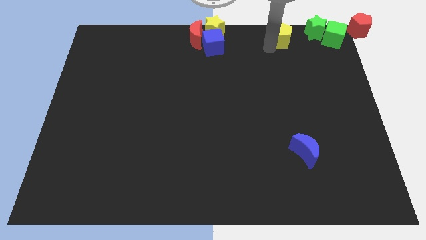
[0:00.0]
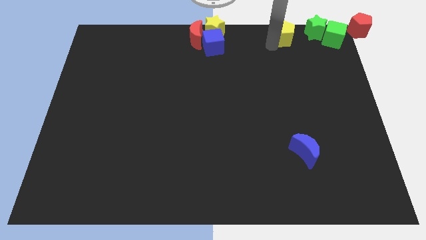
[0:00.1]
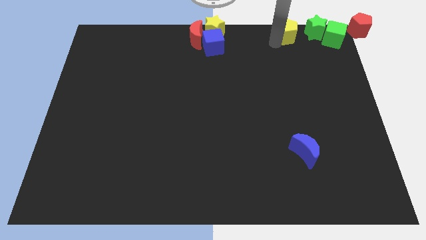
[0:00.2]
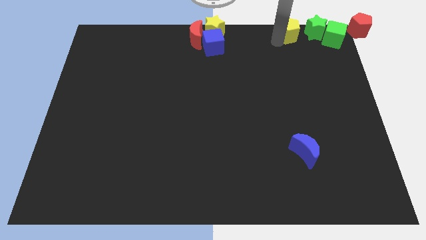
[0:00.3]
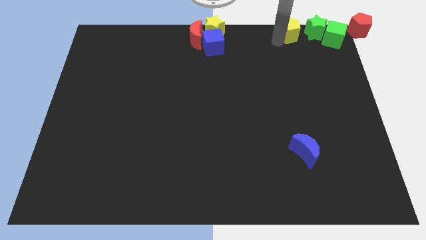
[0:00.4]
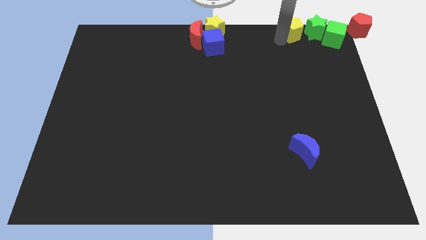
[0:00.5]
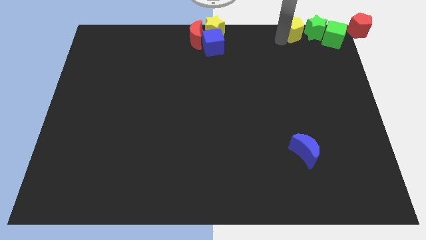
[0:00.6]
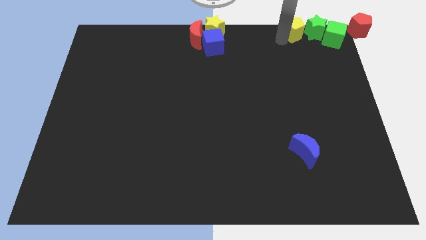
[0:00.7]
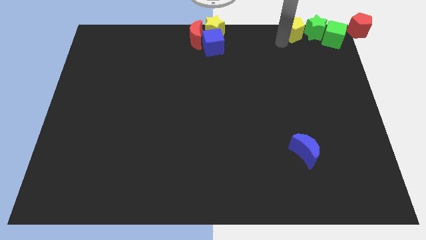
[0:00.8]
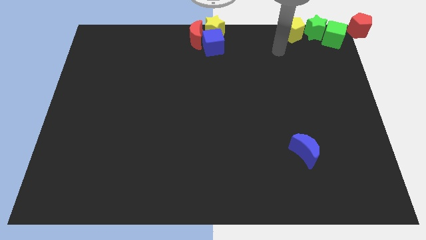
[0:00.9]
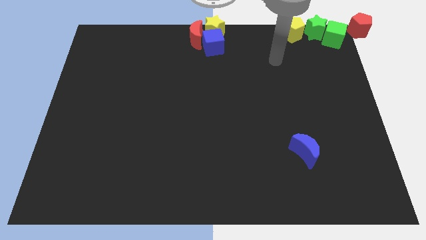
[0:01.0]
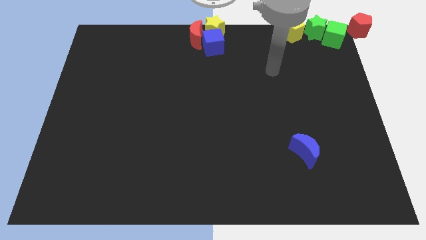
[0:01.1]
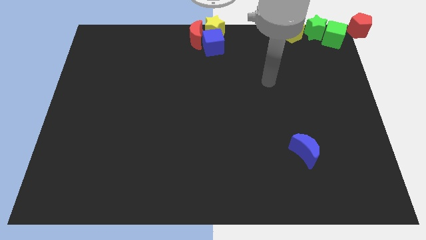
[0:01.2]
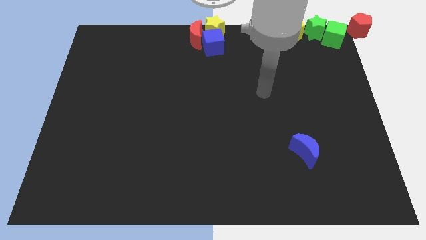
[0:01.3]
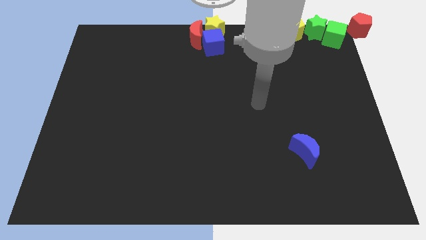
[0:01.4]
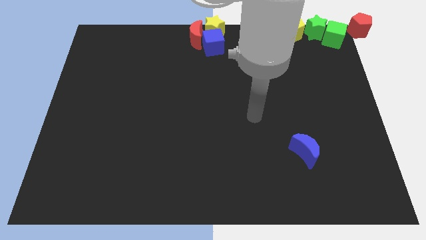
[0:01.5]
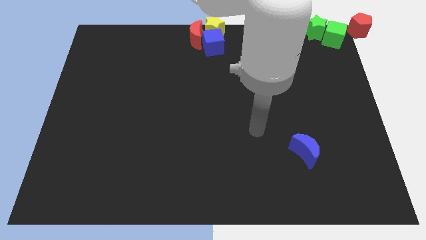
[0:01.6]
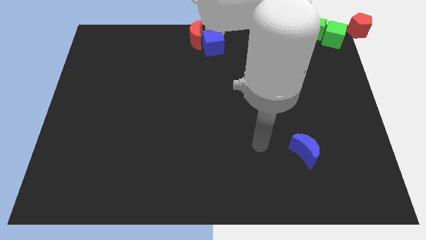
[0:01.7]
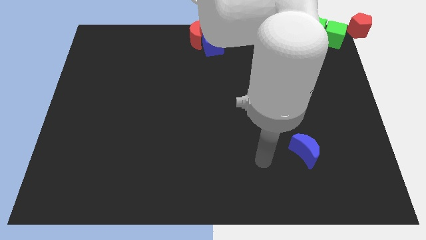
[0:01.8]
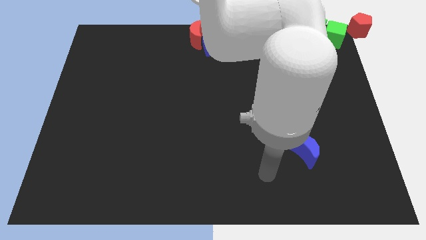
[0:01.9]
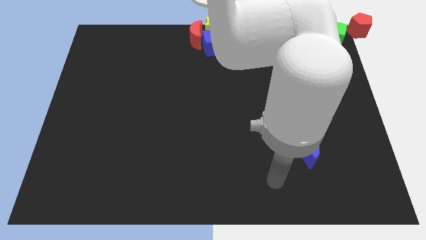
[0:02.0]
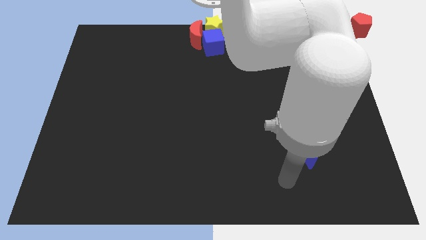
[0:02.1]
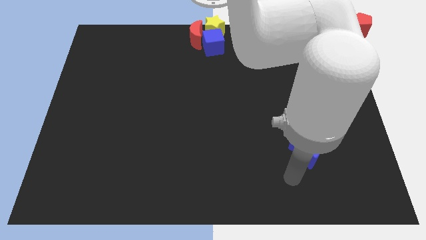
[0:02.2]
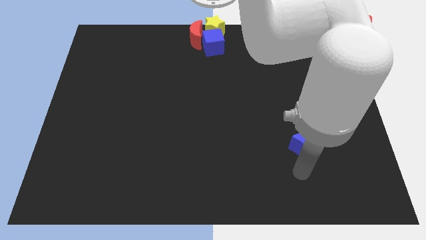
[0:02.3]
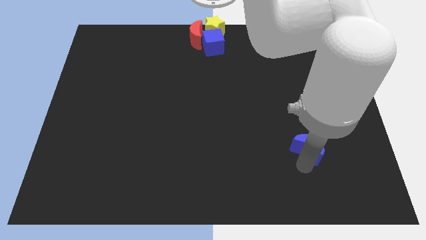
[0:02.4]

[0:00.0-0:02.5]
point your arm below blue moon

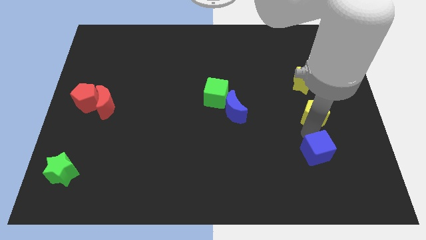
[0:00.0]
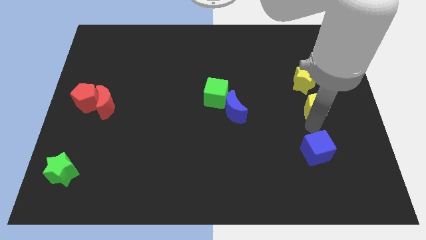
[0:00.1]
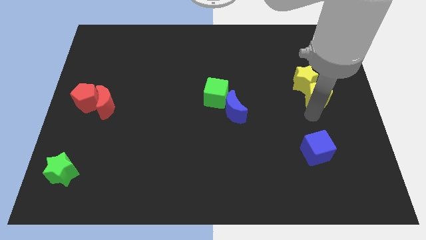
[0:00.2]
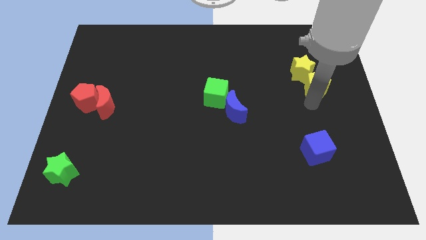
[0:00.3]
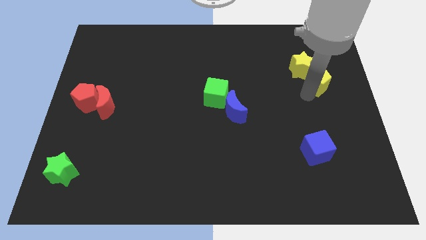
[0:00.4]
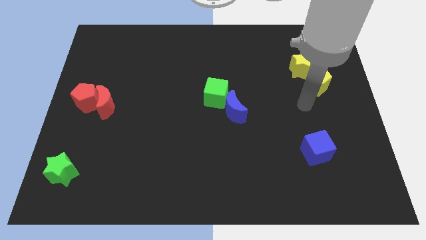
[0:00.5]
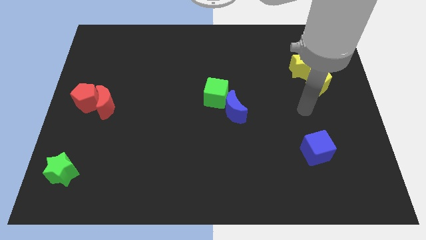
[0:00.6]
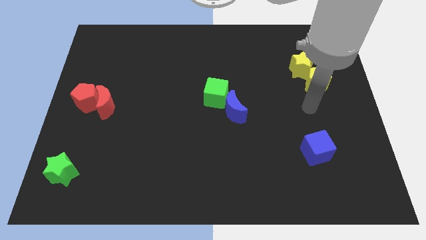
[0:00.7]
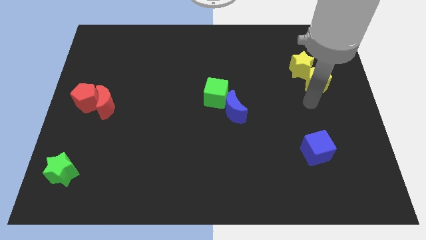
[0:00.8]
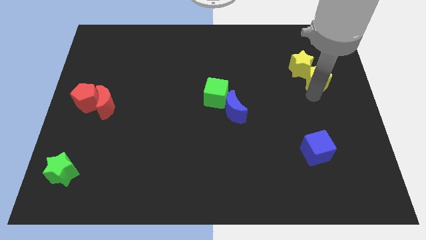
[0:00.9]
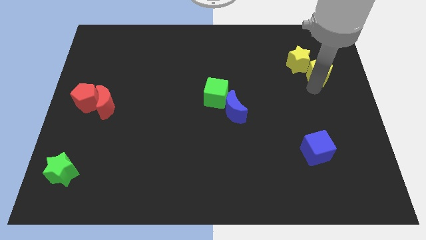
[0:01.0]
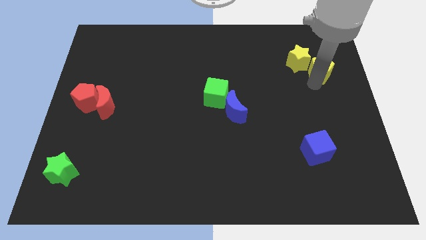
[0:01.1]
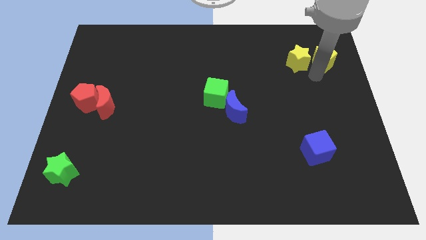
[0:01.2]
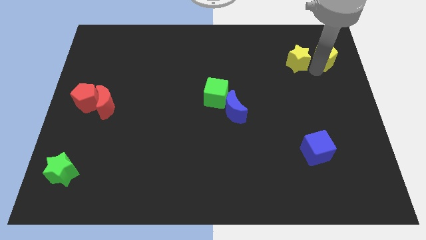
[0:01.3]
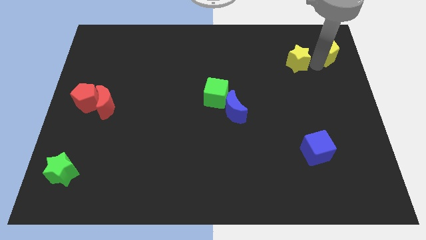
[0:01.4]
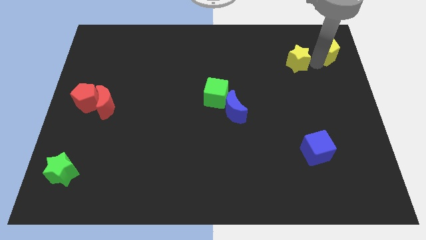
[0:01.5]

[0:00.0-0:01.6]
move the yellow pentagon to the right of the yellow star

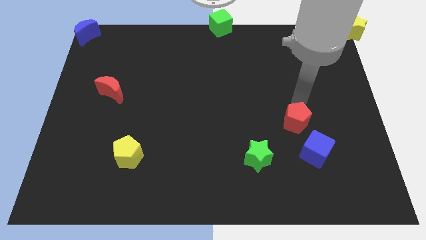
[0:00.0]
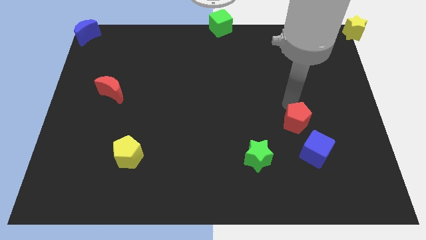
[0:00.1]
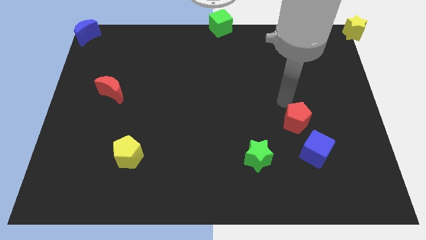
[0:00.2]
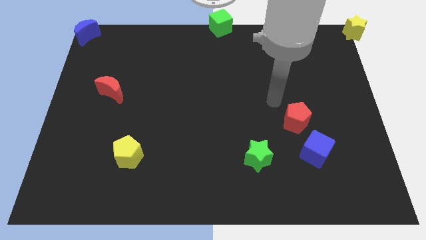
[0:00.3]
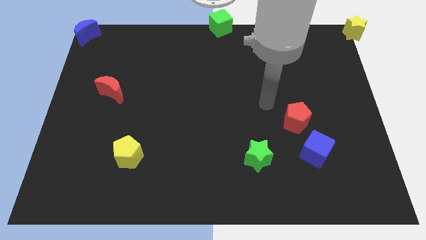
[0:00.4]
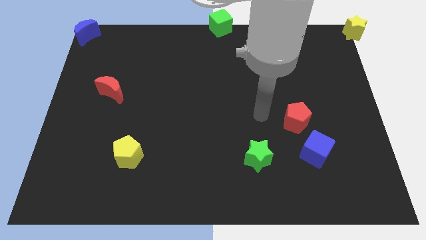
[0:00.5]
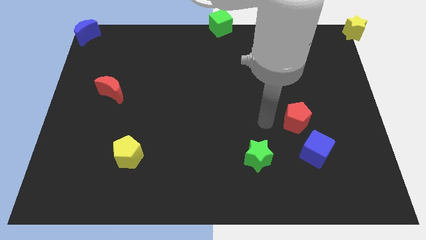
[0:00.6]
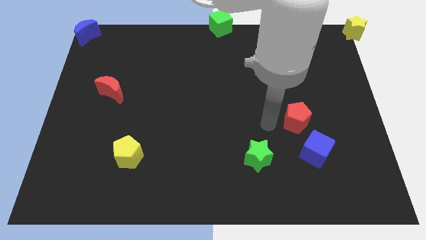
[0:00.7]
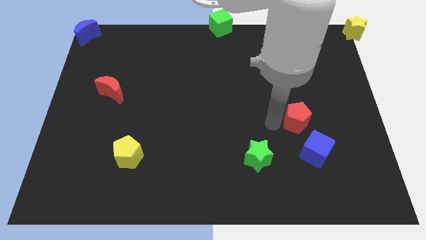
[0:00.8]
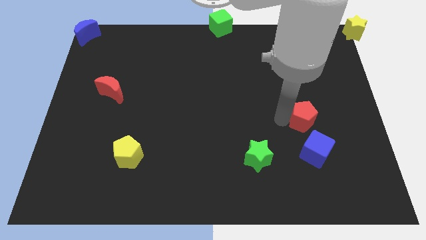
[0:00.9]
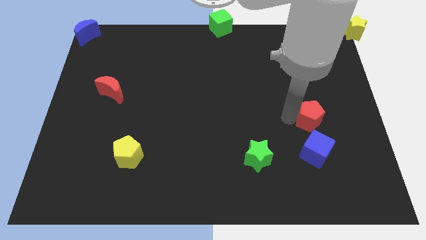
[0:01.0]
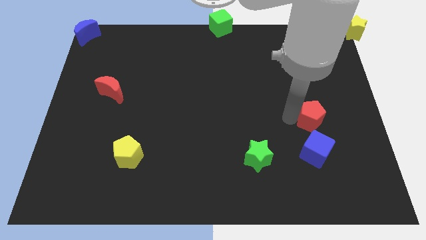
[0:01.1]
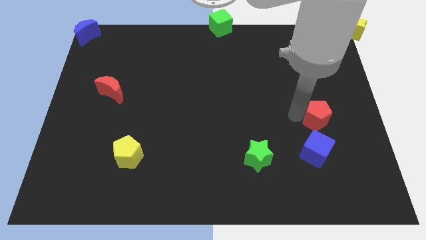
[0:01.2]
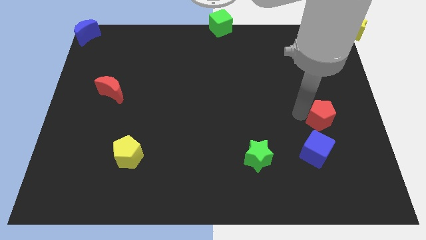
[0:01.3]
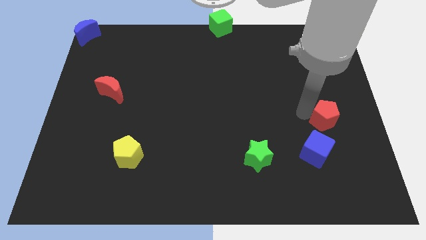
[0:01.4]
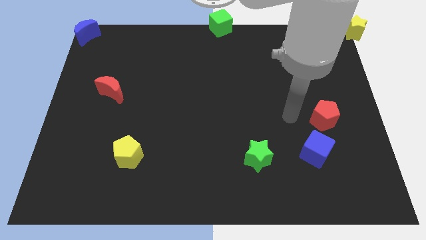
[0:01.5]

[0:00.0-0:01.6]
move the red pentagon to the top right side of the blue cube

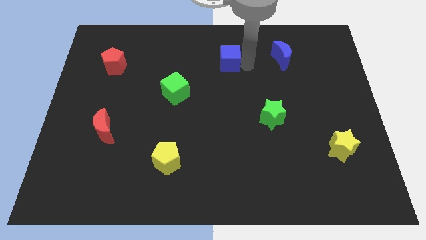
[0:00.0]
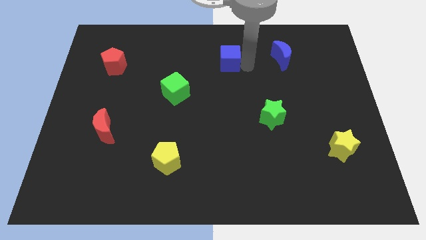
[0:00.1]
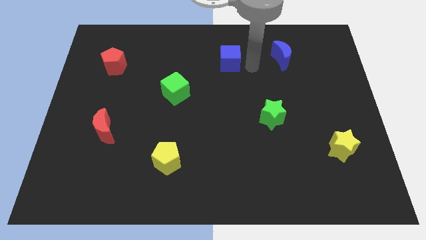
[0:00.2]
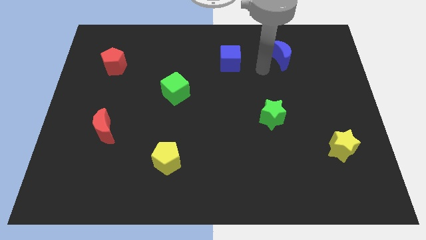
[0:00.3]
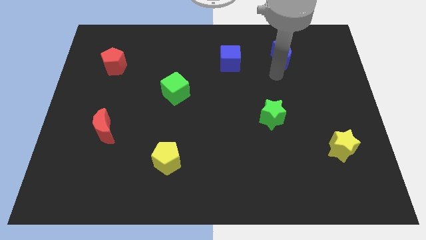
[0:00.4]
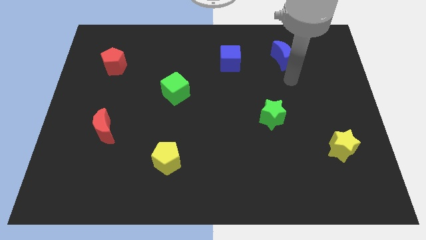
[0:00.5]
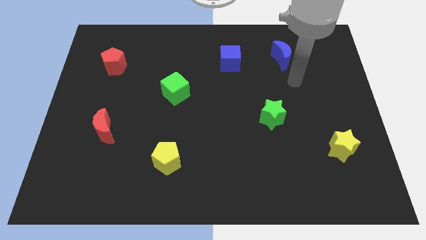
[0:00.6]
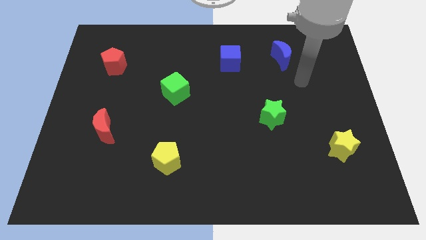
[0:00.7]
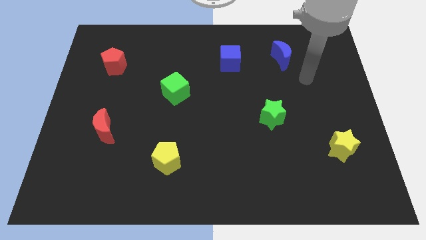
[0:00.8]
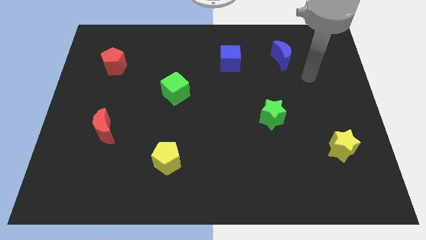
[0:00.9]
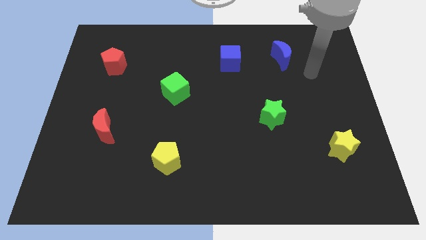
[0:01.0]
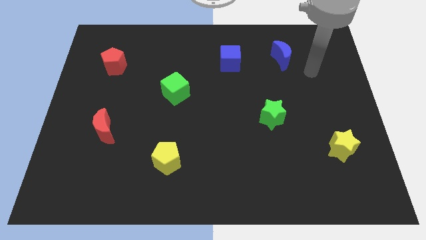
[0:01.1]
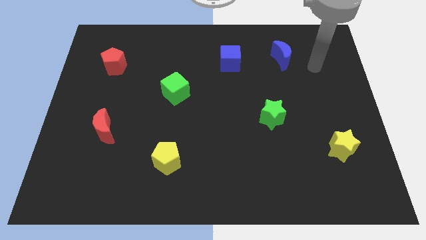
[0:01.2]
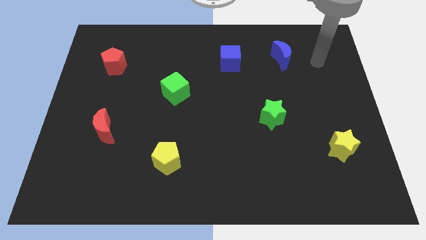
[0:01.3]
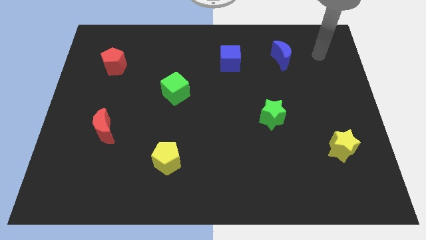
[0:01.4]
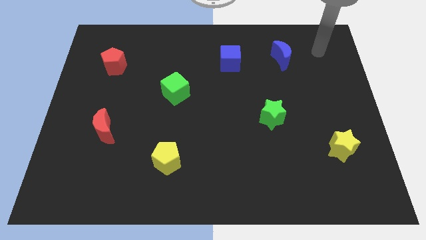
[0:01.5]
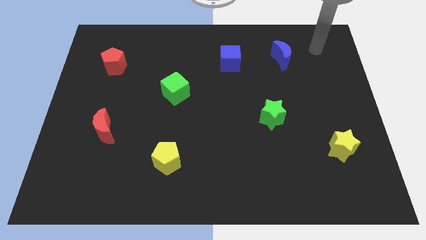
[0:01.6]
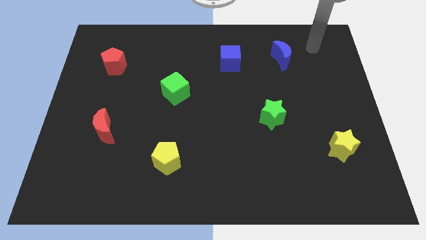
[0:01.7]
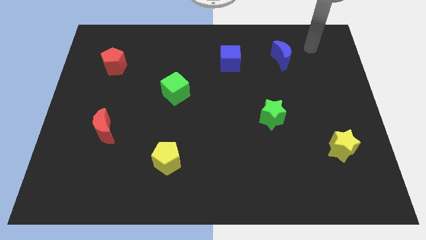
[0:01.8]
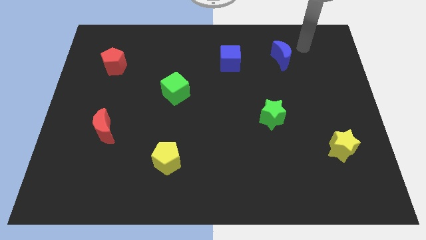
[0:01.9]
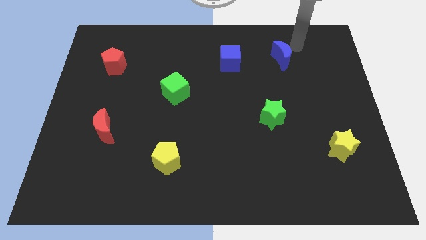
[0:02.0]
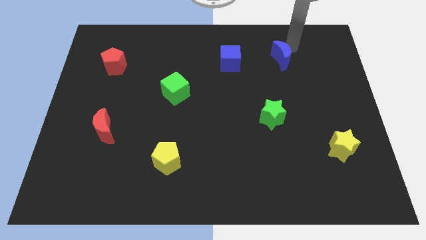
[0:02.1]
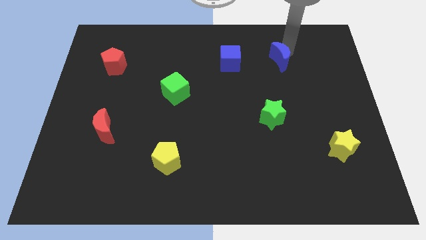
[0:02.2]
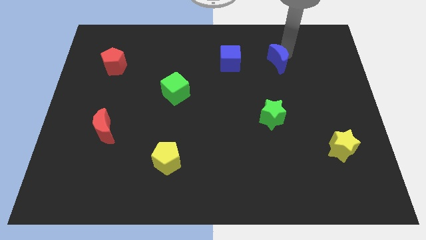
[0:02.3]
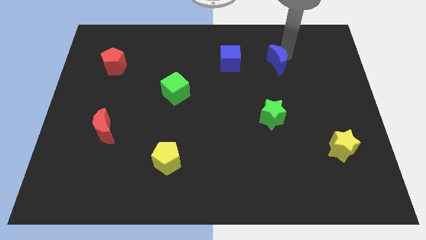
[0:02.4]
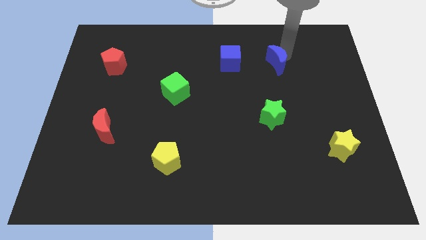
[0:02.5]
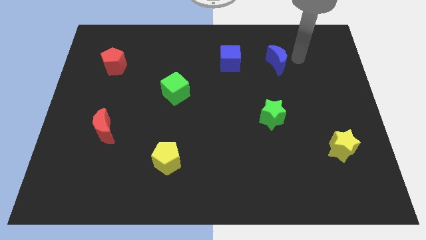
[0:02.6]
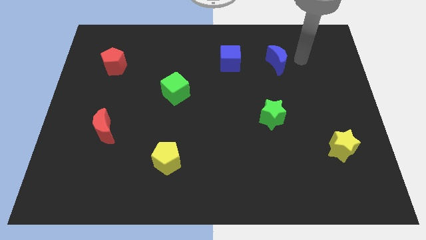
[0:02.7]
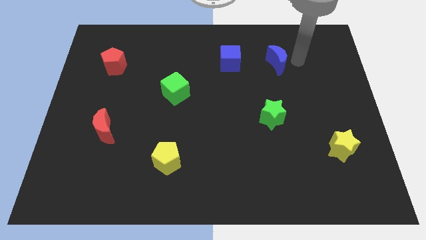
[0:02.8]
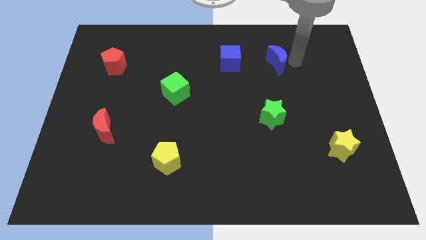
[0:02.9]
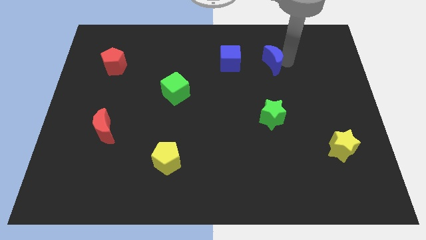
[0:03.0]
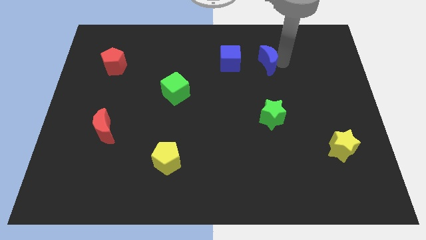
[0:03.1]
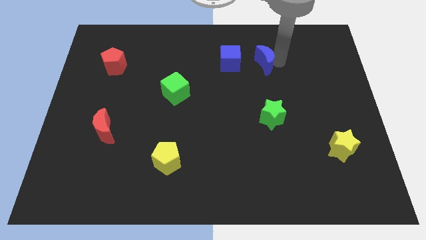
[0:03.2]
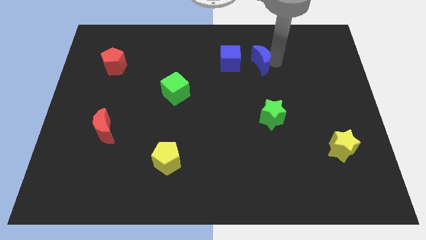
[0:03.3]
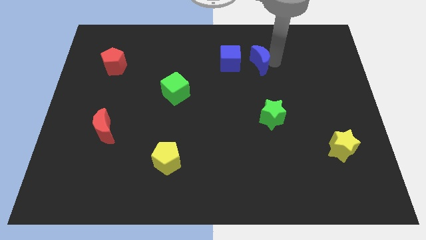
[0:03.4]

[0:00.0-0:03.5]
place the blue crescent above the green star
